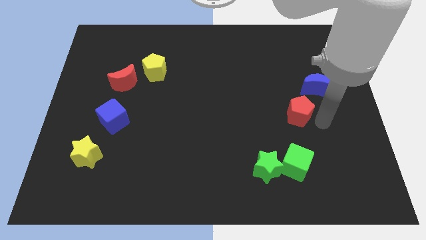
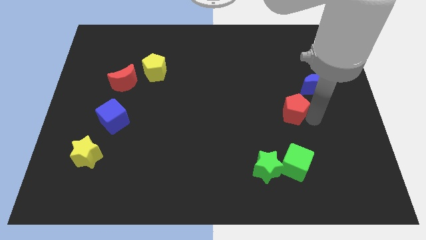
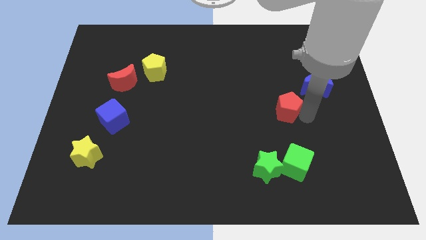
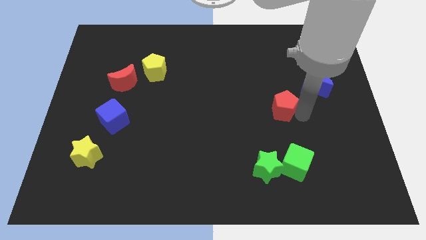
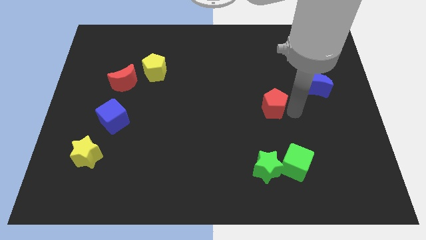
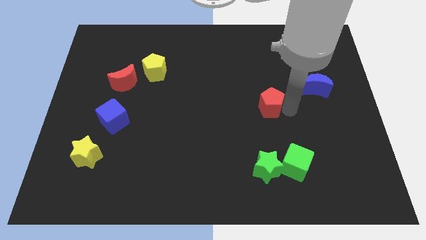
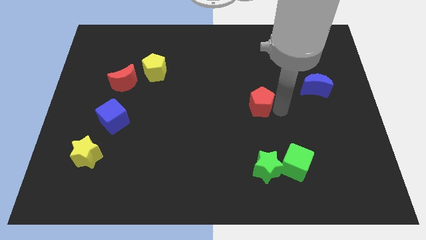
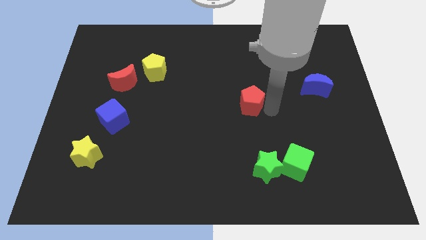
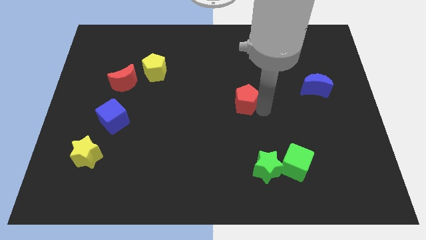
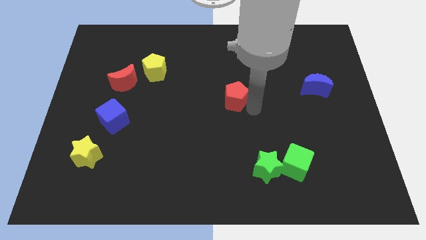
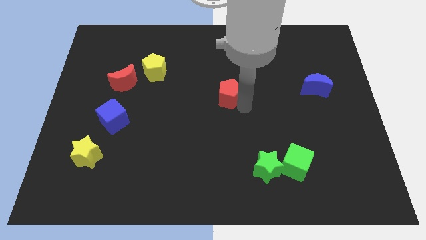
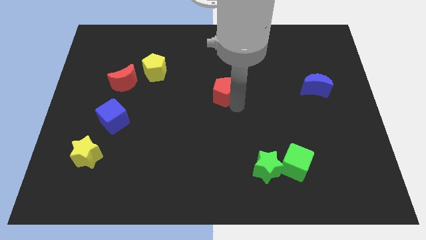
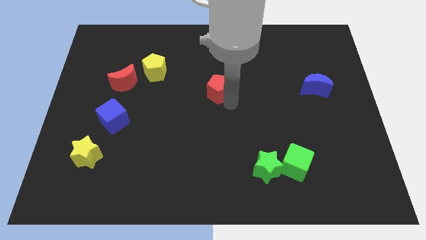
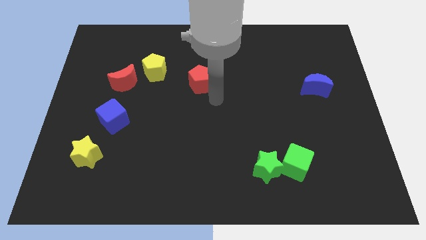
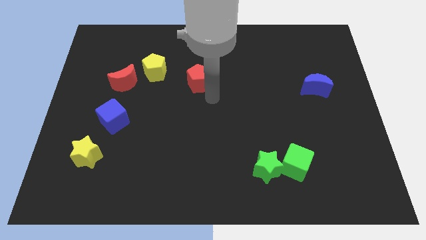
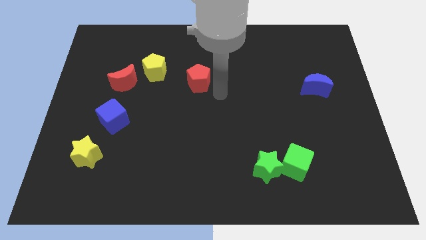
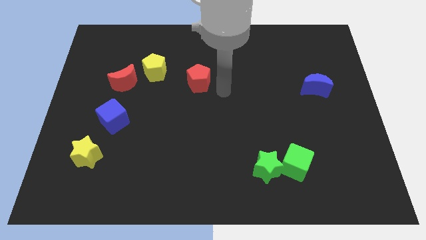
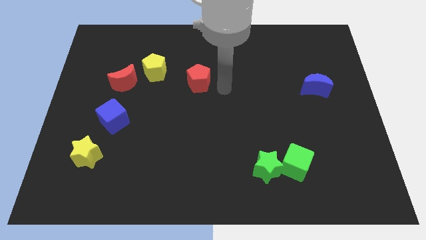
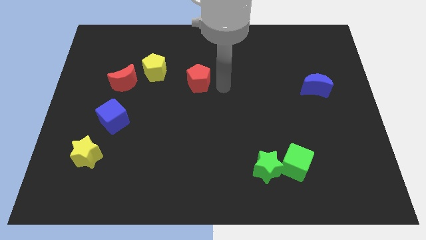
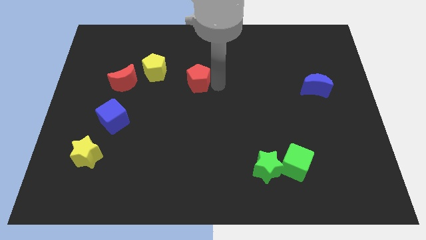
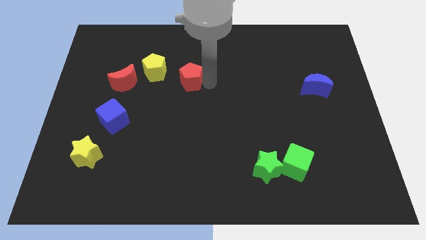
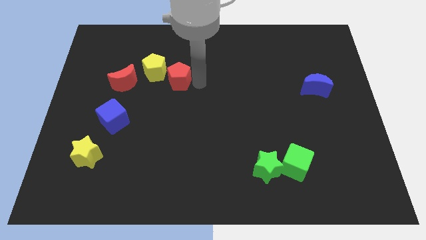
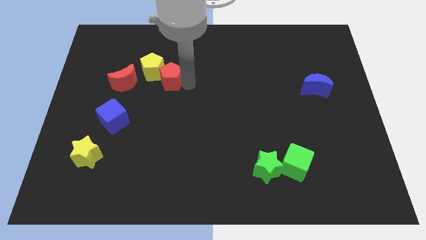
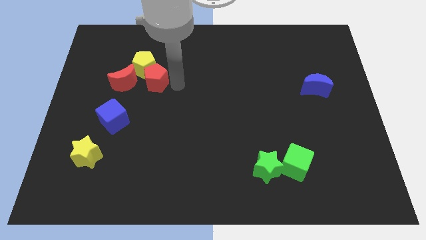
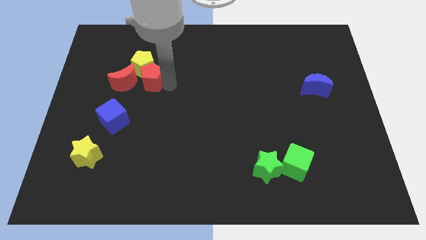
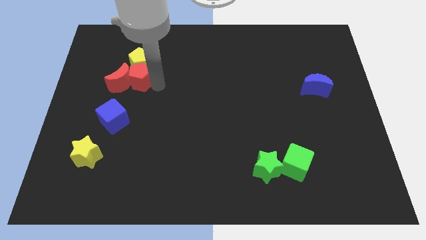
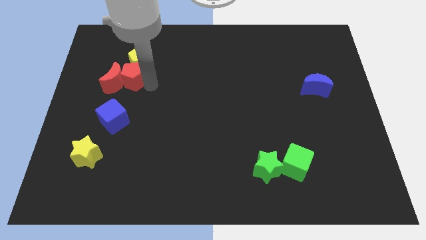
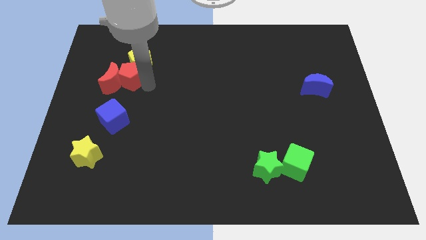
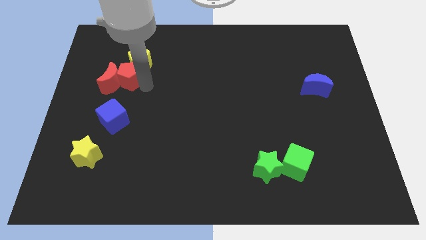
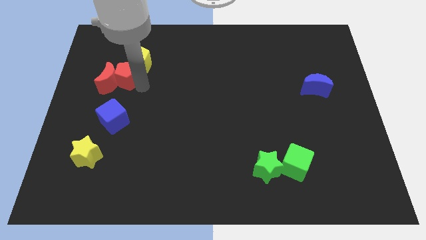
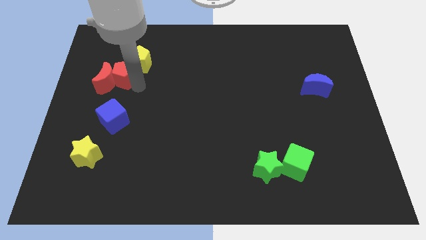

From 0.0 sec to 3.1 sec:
move the red pentagon into the right side of the red crescent

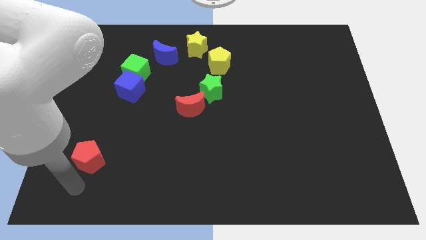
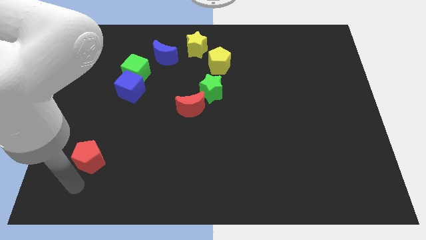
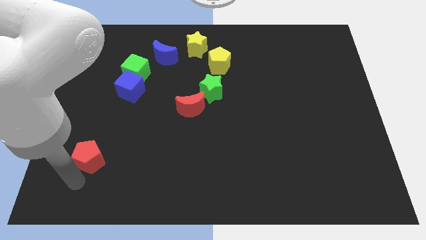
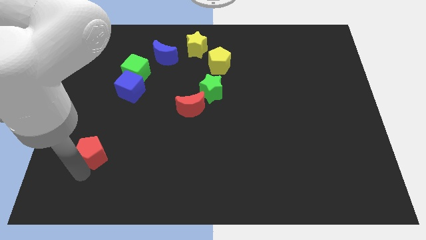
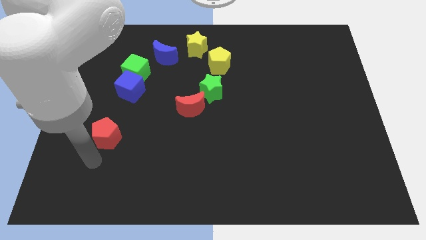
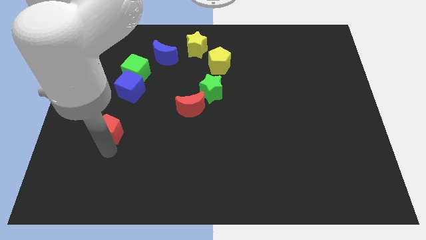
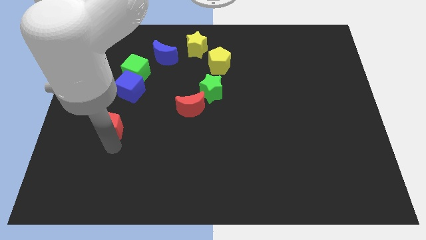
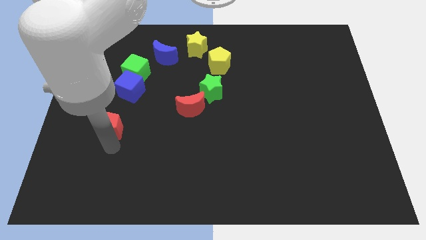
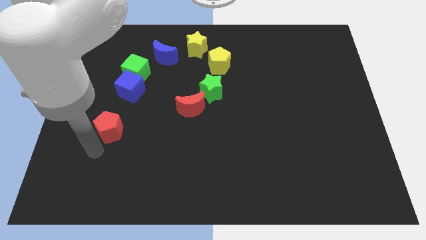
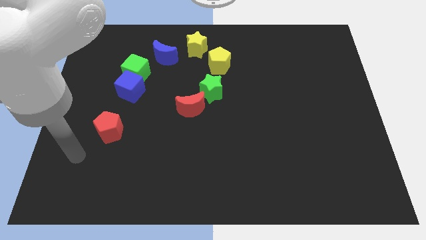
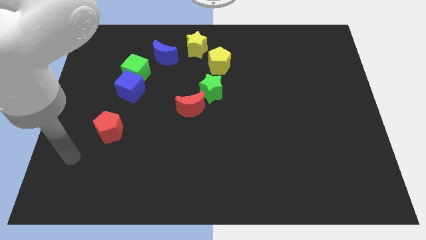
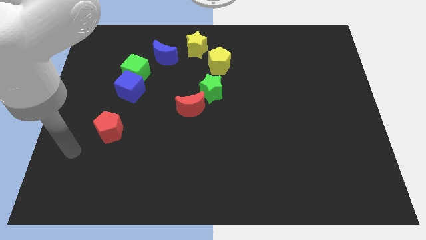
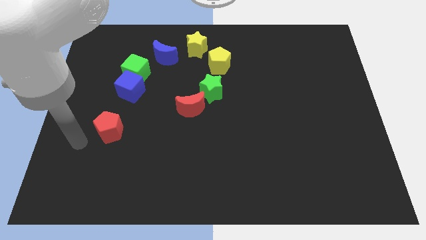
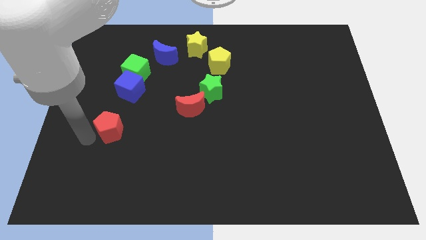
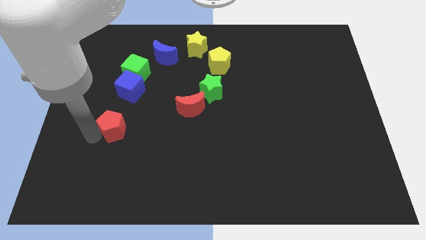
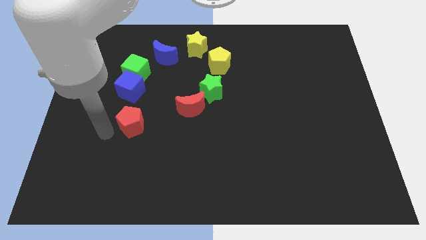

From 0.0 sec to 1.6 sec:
move the red pentagon vertically below the blue cube

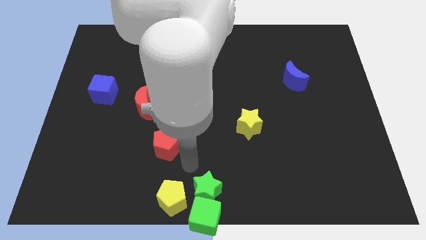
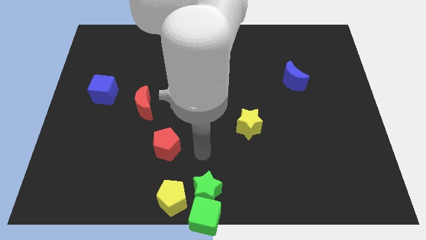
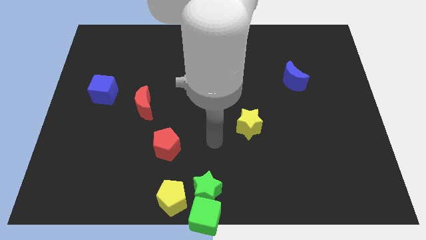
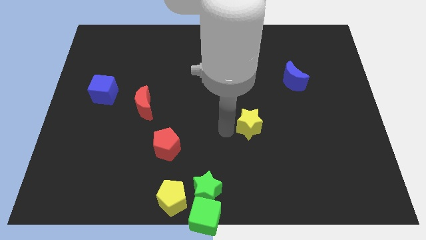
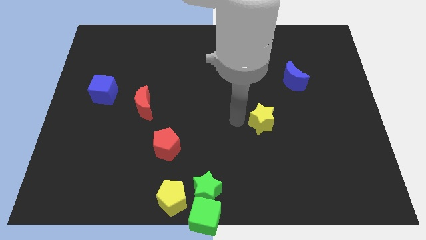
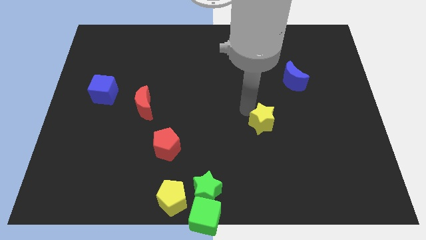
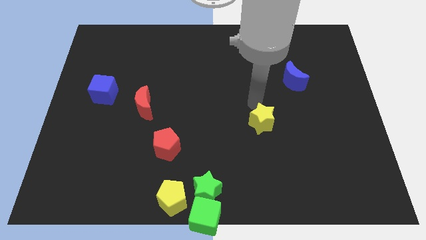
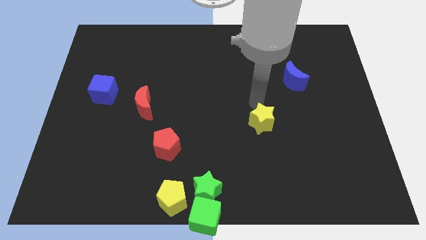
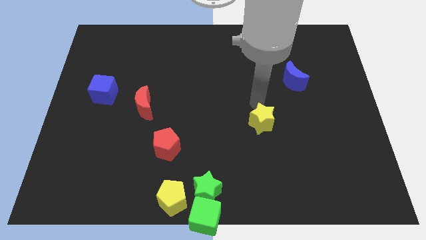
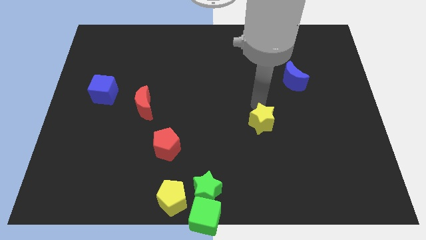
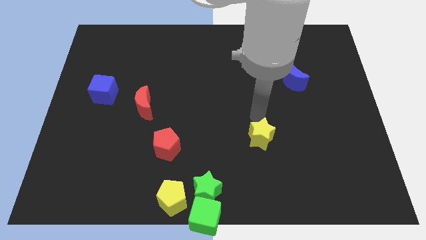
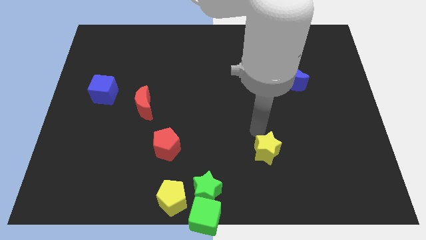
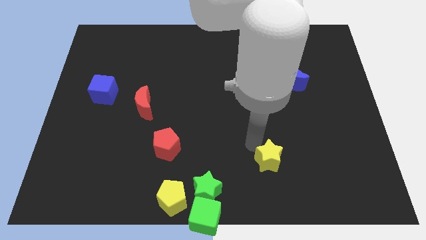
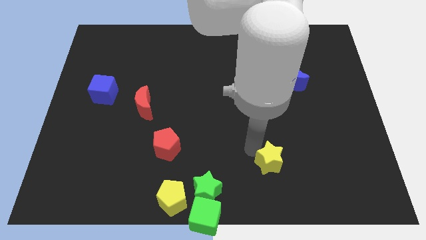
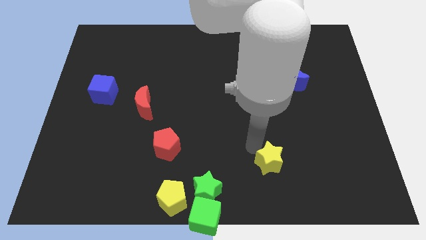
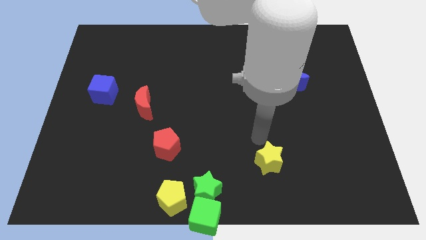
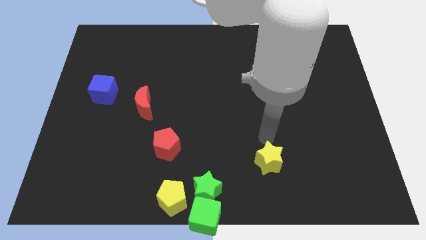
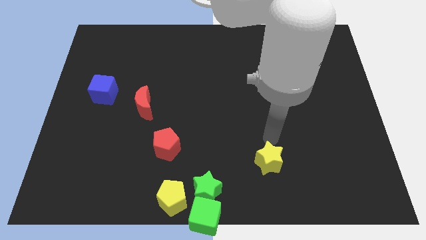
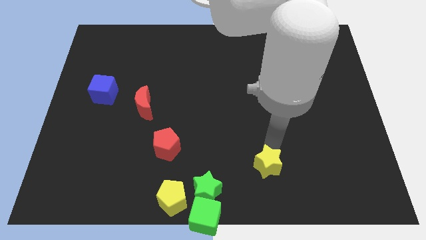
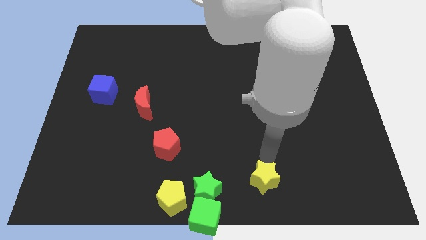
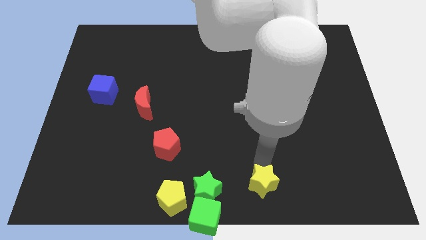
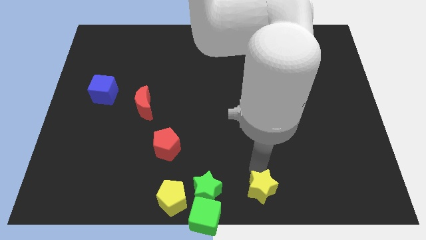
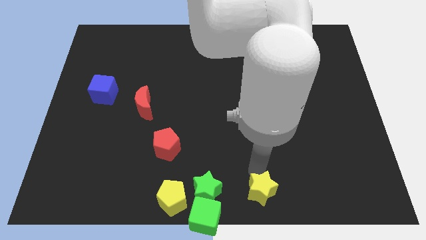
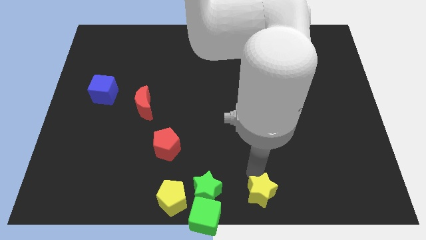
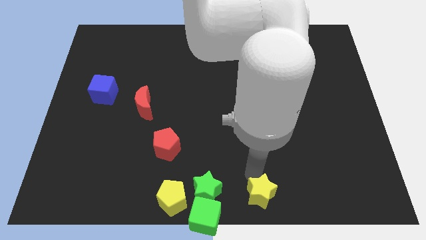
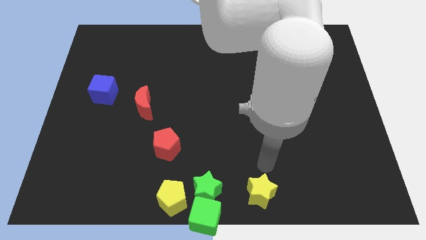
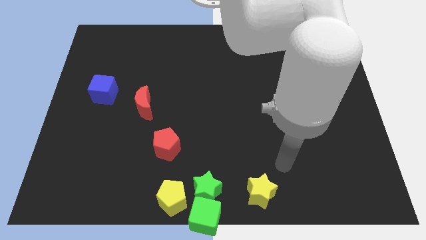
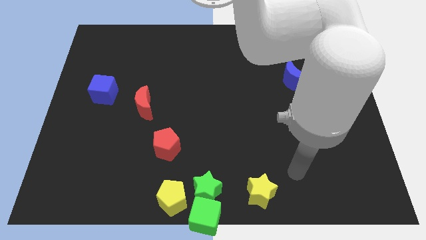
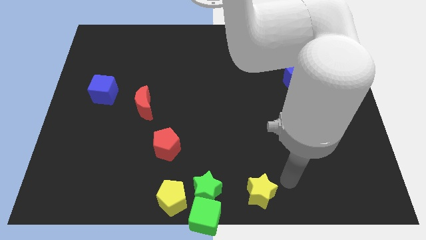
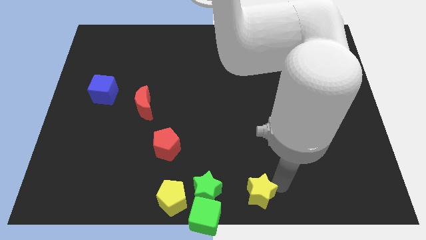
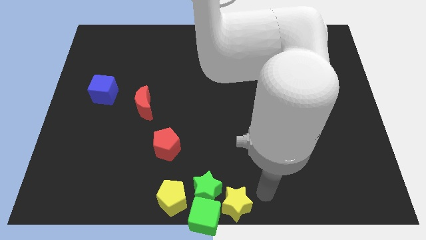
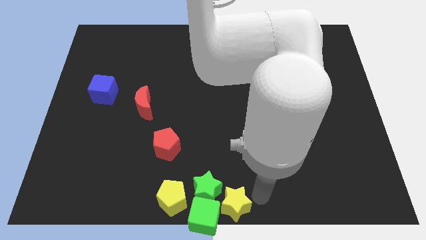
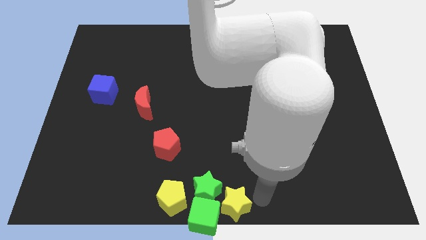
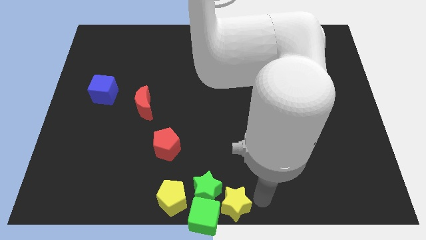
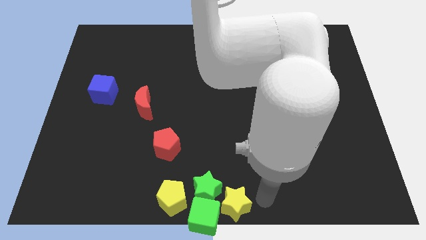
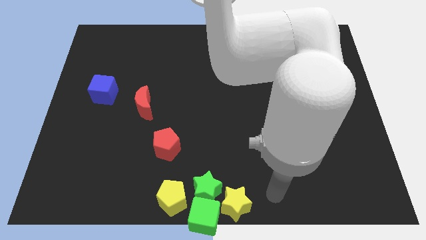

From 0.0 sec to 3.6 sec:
move the yellow star into the group of blocks at the bottom center

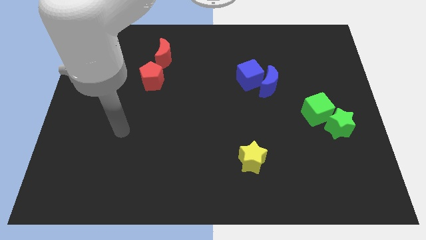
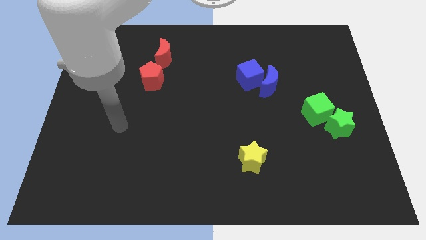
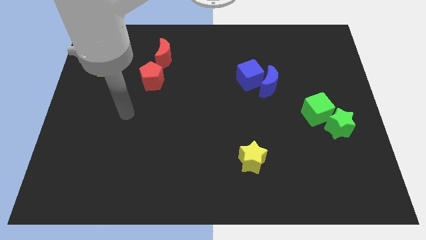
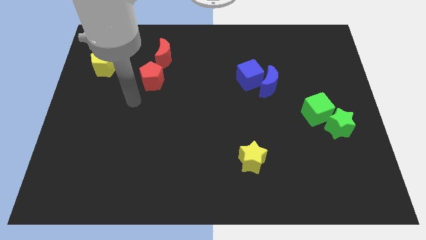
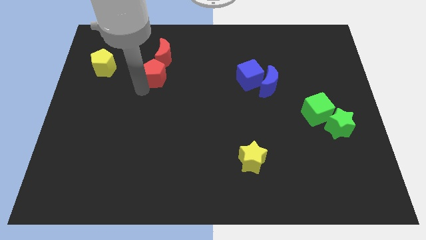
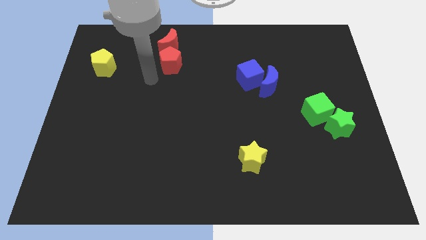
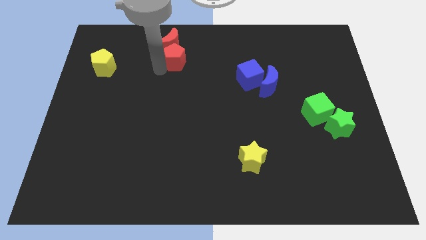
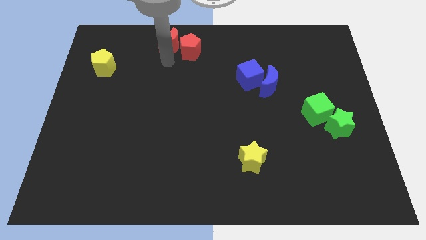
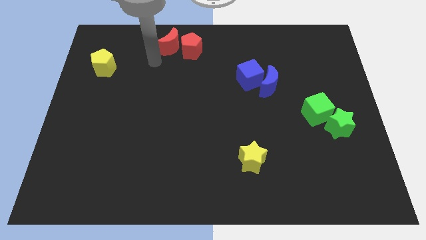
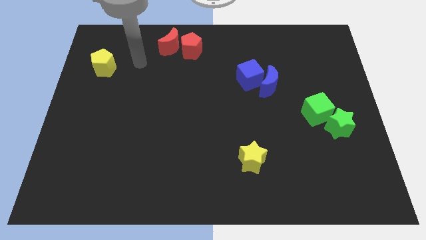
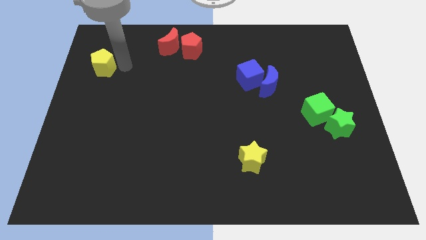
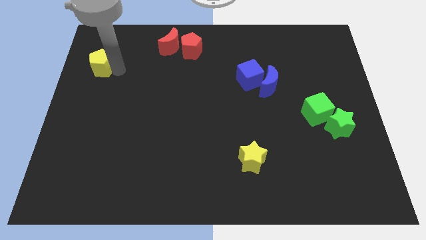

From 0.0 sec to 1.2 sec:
place the red pentagon to the right side of the red crescent
